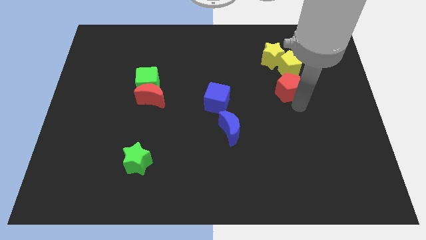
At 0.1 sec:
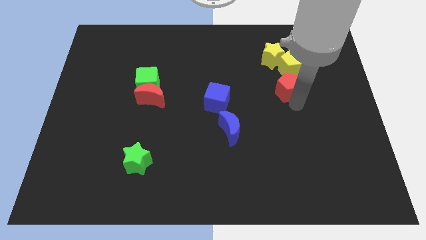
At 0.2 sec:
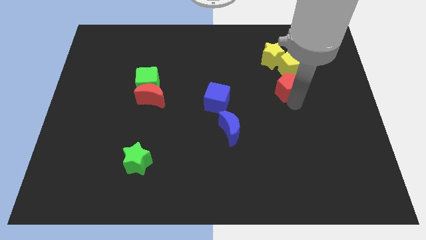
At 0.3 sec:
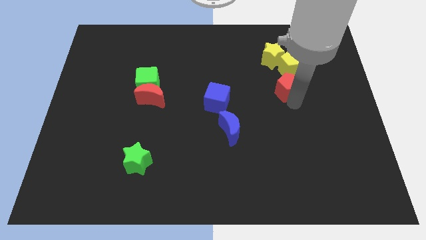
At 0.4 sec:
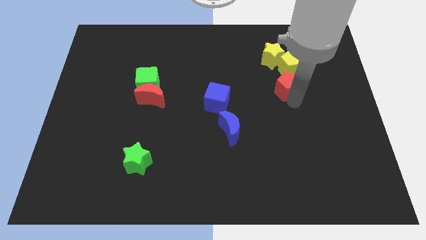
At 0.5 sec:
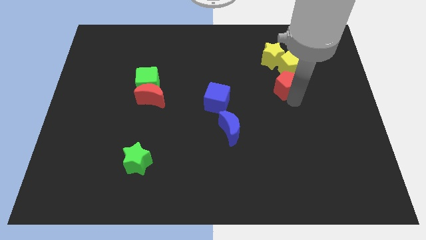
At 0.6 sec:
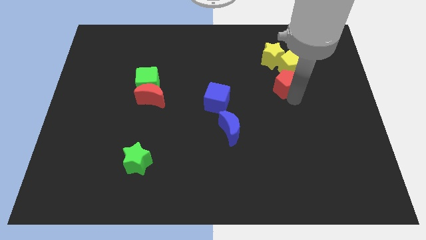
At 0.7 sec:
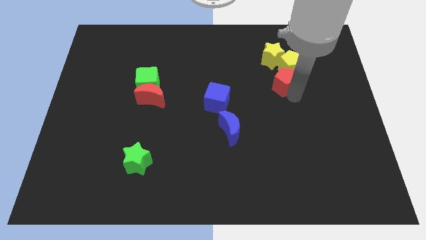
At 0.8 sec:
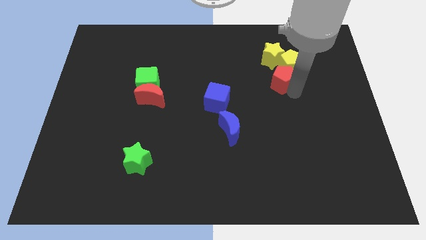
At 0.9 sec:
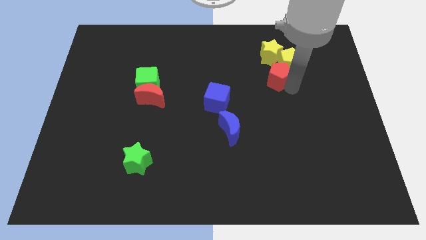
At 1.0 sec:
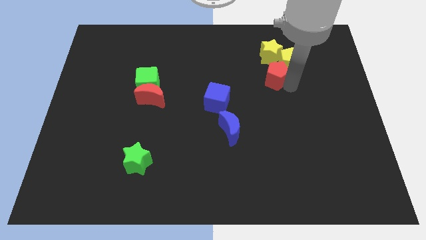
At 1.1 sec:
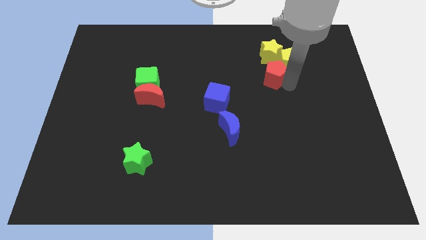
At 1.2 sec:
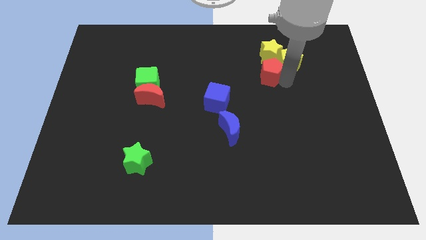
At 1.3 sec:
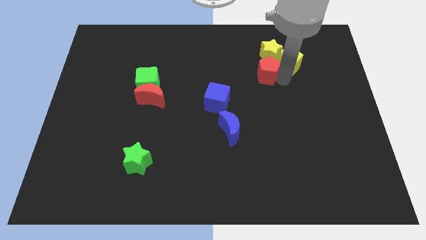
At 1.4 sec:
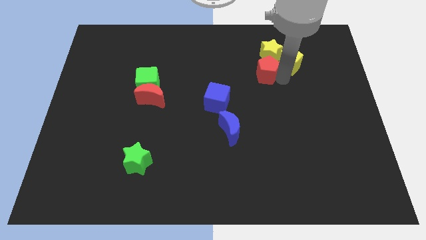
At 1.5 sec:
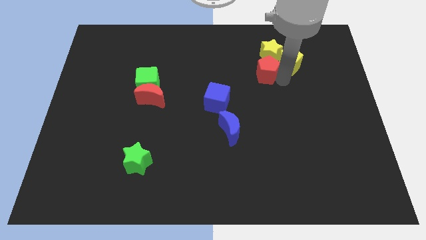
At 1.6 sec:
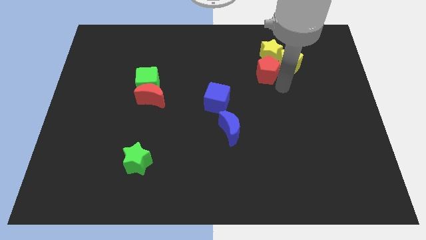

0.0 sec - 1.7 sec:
push the red penatgon into the yellow blocks

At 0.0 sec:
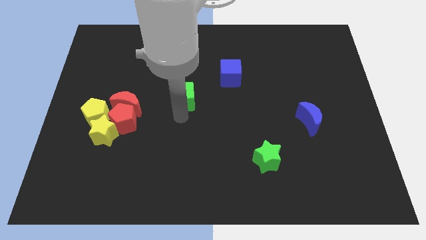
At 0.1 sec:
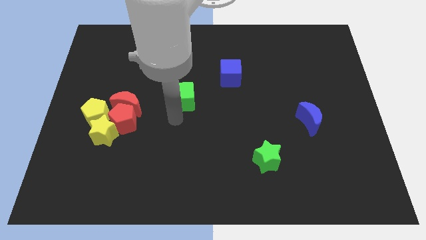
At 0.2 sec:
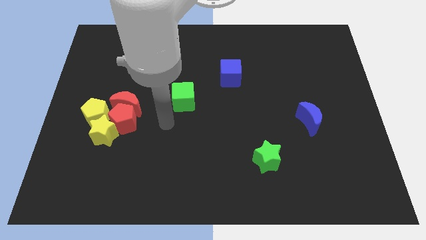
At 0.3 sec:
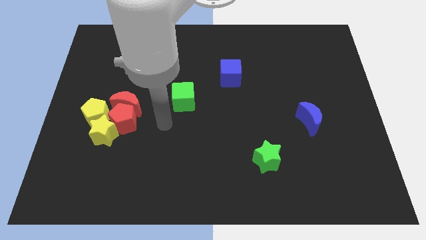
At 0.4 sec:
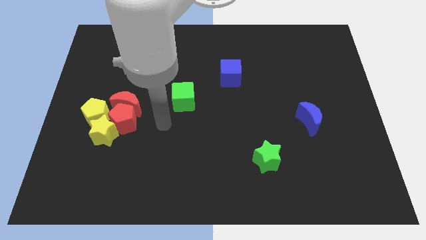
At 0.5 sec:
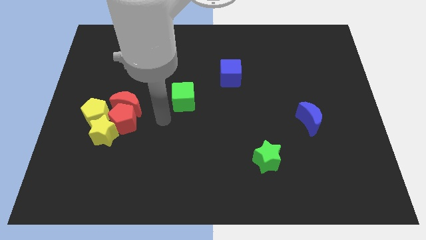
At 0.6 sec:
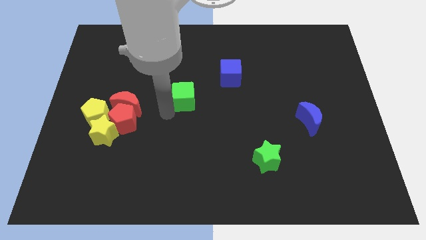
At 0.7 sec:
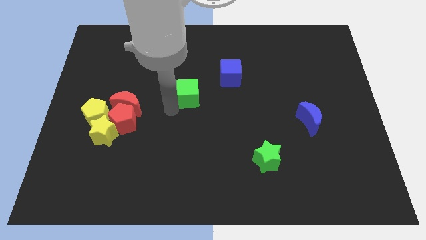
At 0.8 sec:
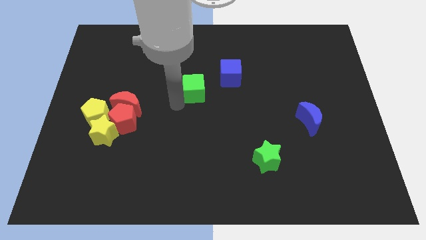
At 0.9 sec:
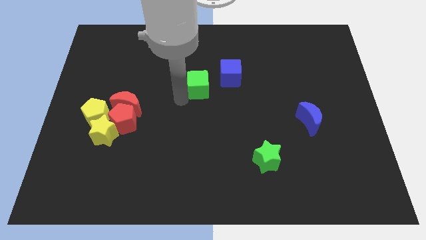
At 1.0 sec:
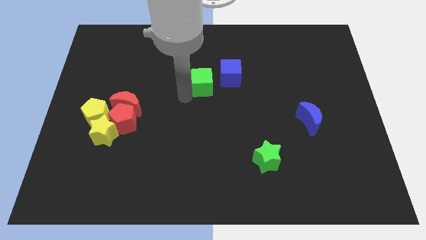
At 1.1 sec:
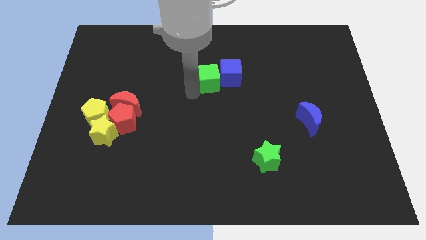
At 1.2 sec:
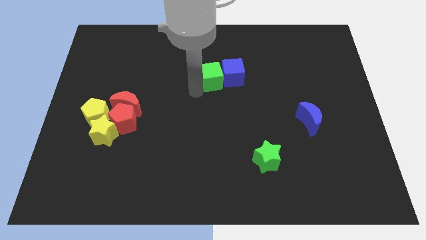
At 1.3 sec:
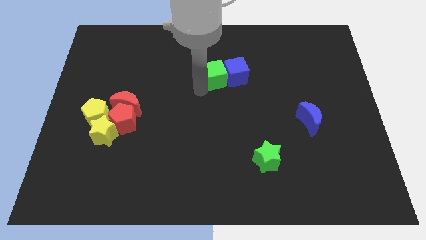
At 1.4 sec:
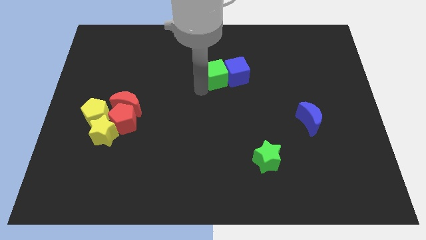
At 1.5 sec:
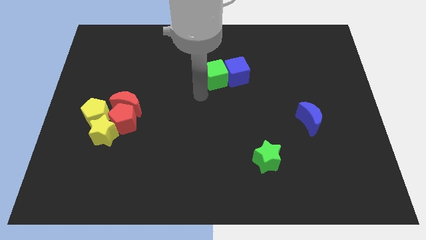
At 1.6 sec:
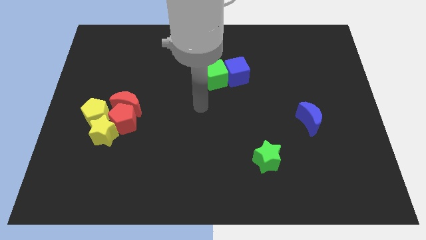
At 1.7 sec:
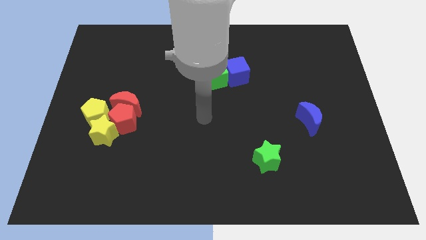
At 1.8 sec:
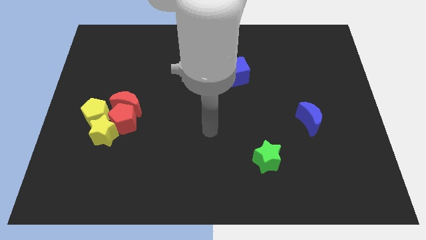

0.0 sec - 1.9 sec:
move the green cube into the blue cube

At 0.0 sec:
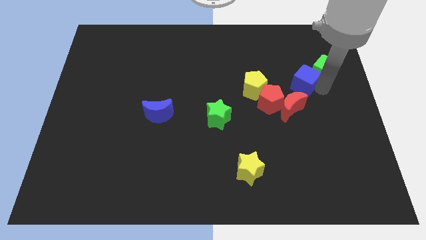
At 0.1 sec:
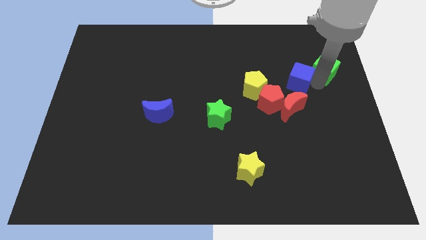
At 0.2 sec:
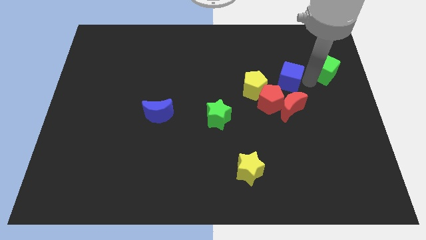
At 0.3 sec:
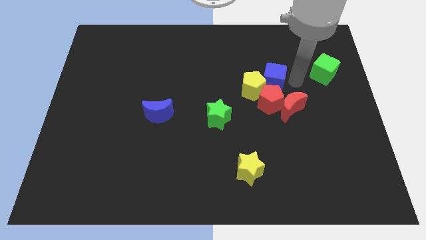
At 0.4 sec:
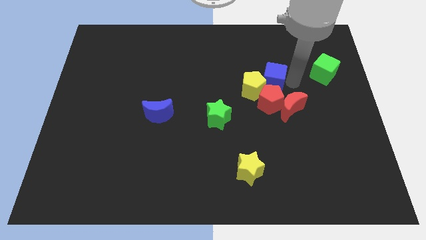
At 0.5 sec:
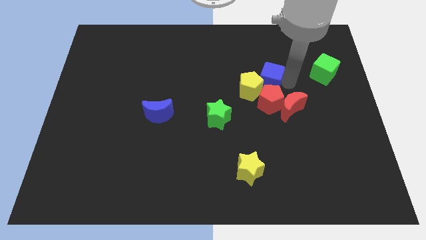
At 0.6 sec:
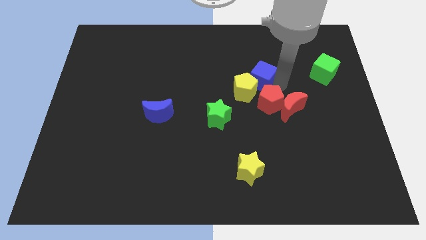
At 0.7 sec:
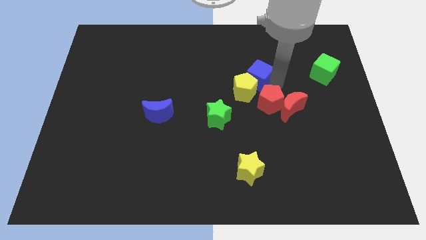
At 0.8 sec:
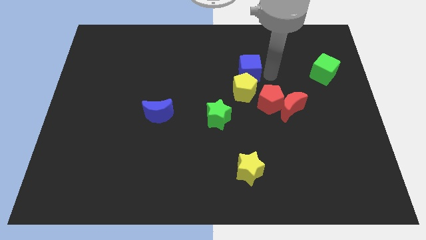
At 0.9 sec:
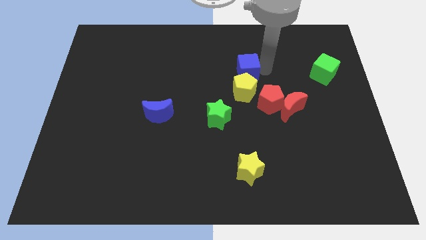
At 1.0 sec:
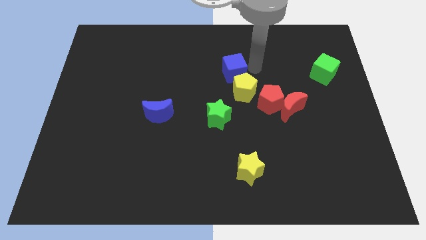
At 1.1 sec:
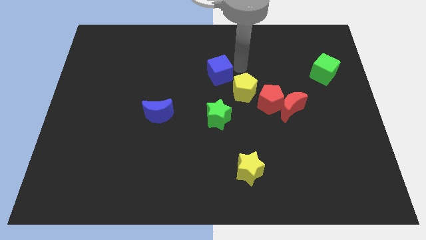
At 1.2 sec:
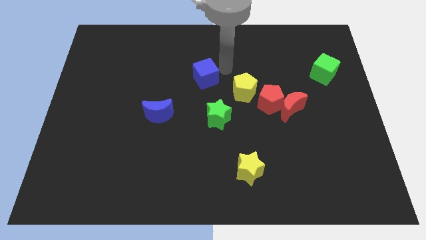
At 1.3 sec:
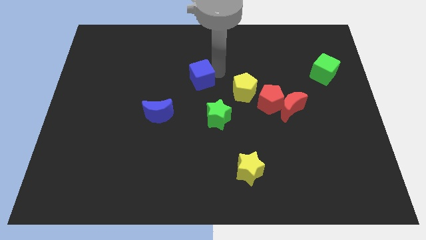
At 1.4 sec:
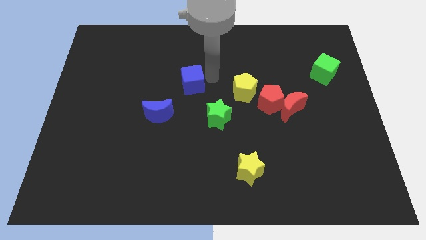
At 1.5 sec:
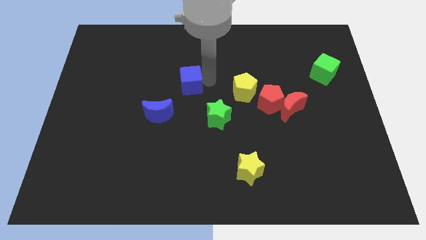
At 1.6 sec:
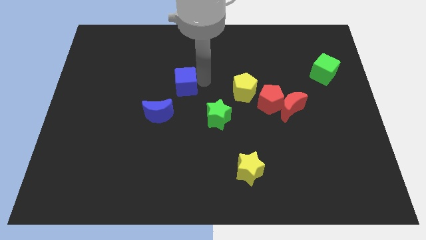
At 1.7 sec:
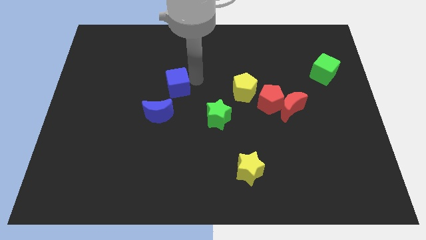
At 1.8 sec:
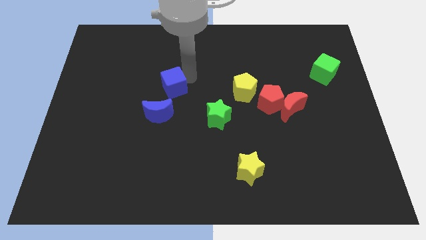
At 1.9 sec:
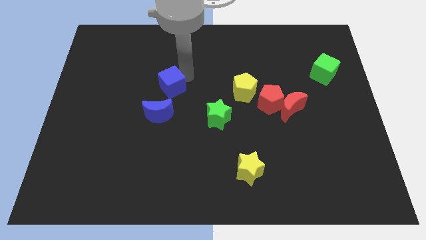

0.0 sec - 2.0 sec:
place the blue cube to the left of the yellow pentagon

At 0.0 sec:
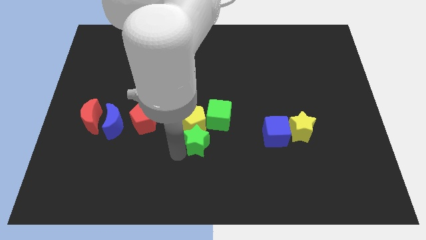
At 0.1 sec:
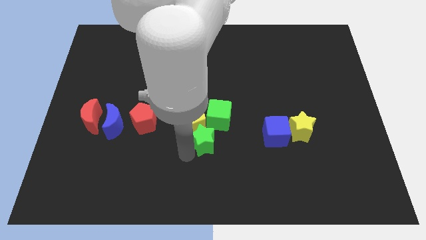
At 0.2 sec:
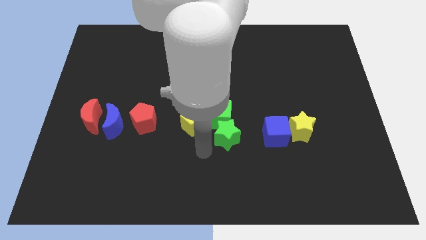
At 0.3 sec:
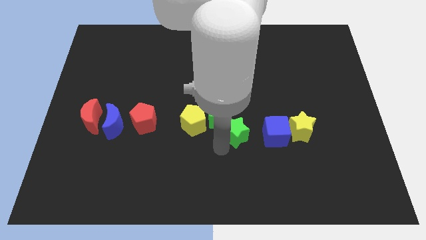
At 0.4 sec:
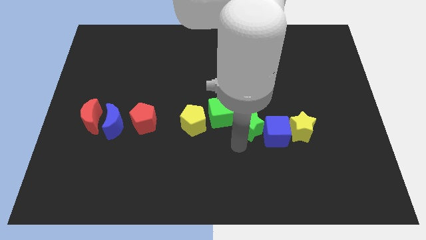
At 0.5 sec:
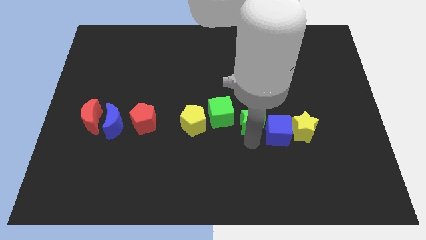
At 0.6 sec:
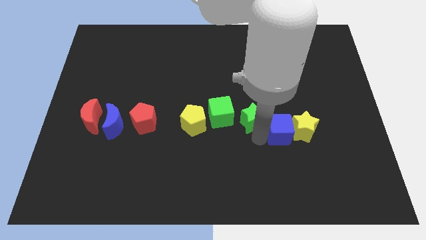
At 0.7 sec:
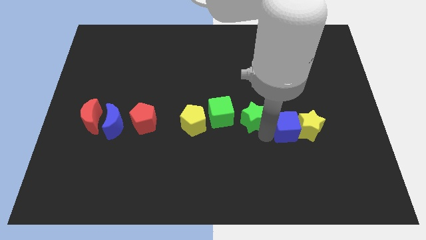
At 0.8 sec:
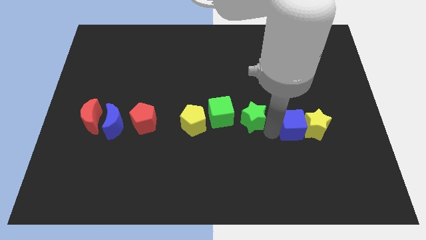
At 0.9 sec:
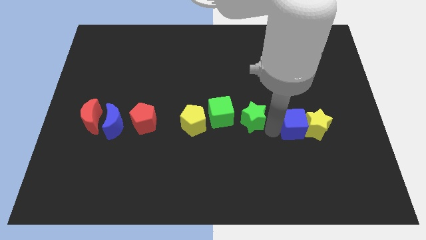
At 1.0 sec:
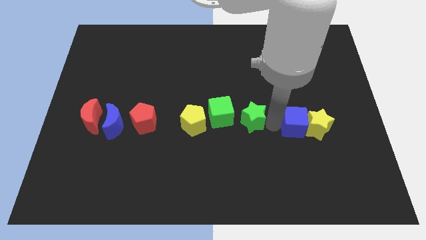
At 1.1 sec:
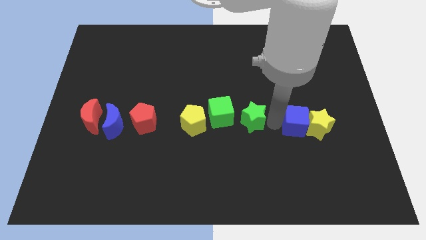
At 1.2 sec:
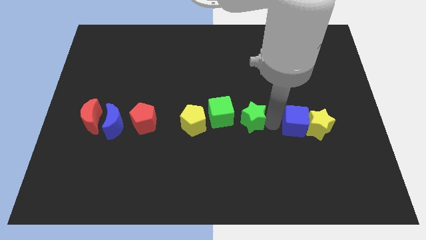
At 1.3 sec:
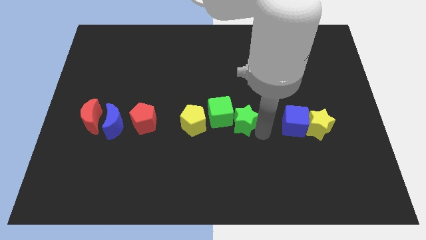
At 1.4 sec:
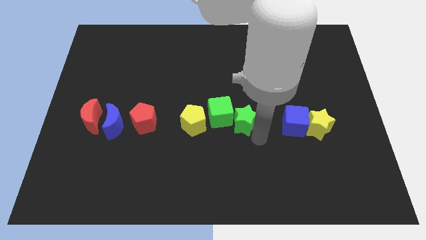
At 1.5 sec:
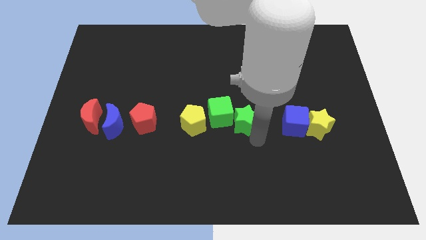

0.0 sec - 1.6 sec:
place the green star to the bottom right of the green cube

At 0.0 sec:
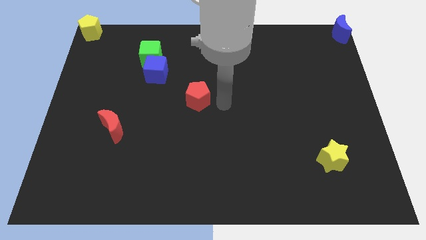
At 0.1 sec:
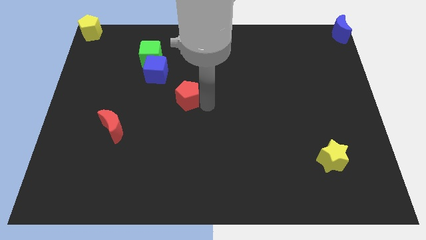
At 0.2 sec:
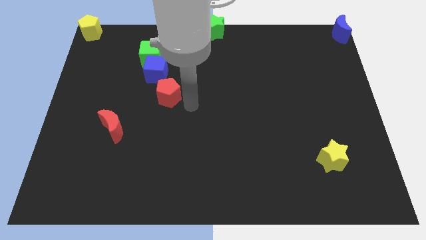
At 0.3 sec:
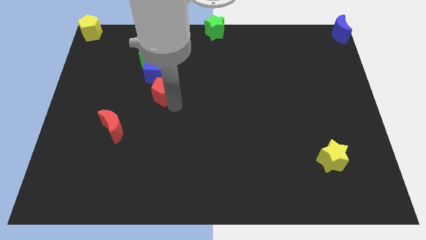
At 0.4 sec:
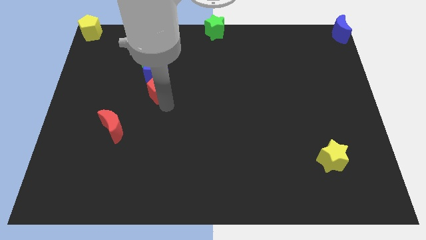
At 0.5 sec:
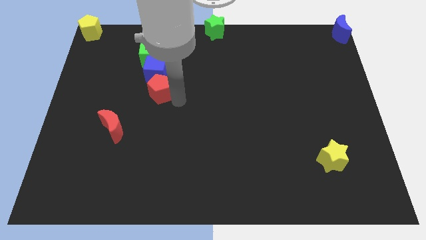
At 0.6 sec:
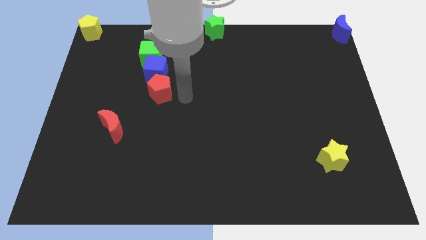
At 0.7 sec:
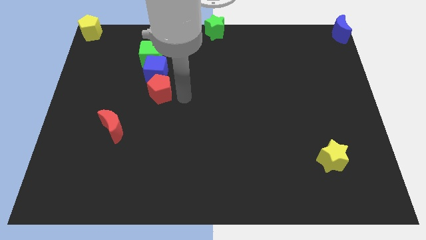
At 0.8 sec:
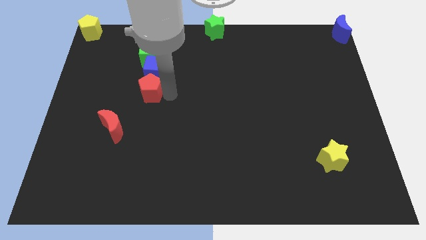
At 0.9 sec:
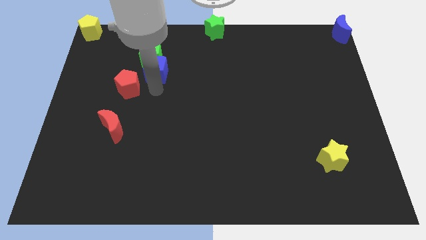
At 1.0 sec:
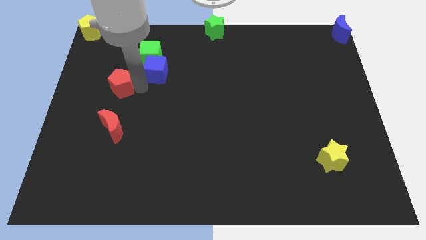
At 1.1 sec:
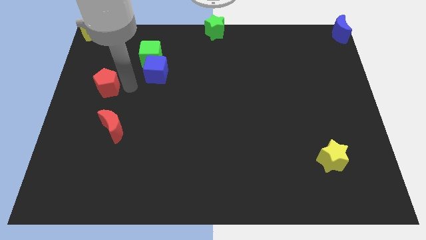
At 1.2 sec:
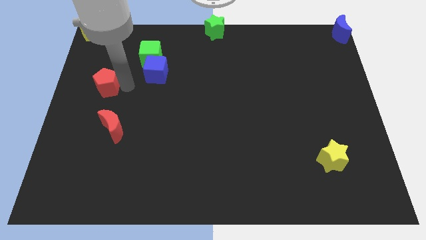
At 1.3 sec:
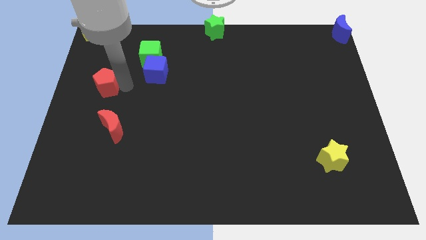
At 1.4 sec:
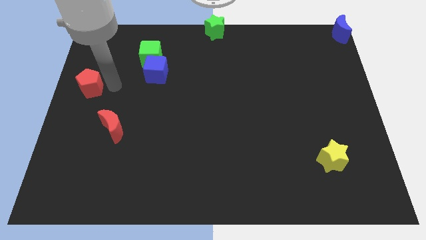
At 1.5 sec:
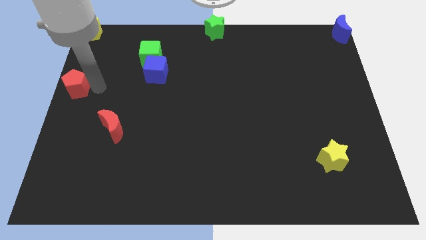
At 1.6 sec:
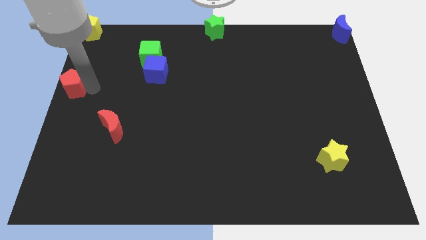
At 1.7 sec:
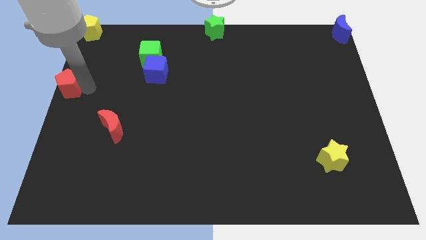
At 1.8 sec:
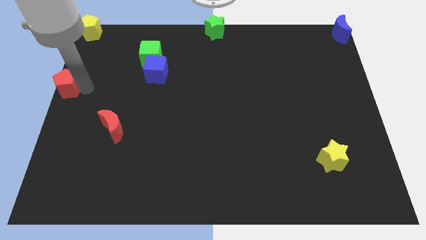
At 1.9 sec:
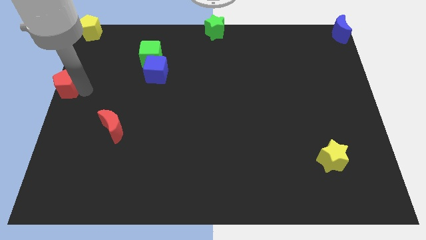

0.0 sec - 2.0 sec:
place the red pentagon at the center left
